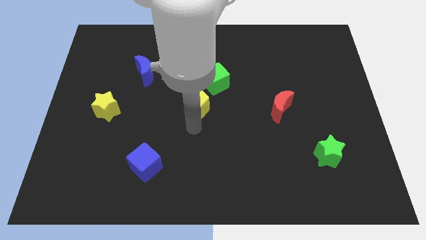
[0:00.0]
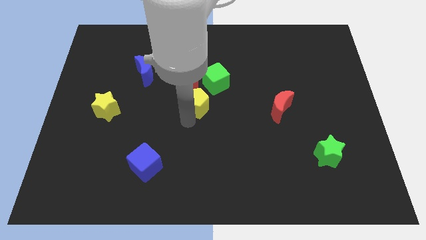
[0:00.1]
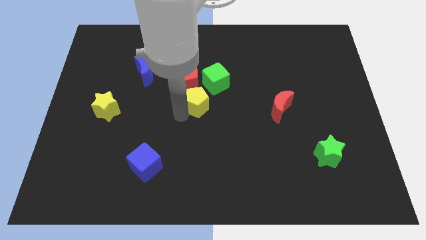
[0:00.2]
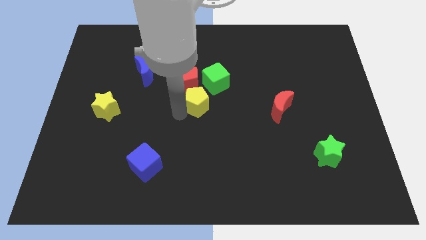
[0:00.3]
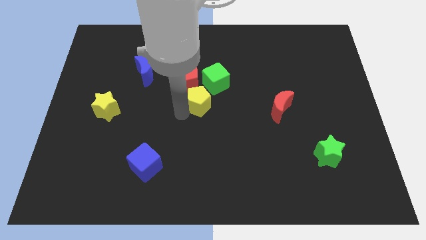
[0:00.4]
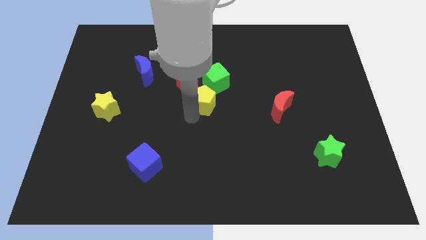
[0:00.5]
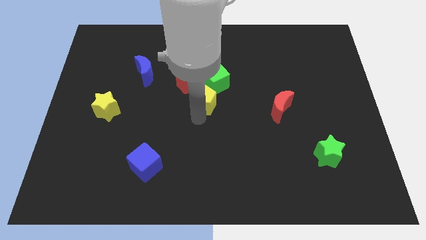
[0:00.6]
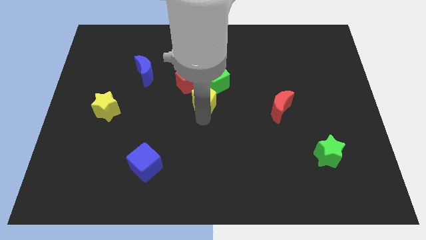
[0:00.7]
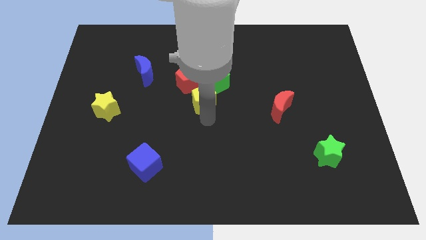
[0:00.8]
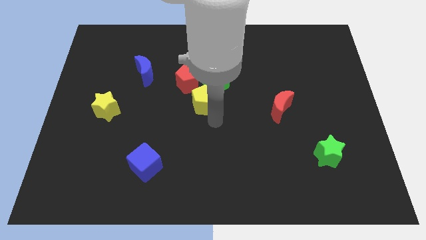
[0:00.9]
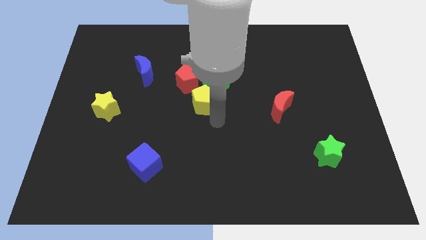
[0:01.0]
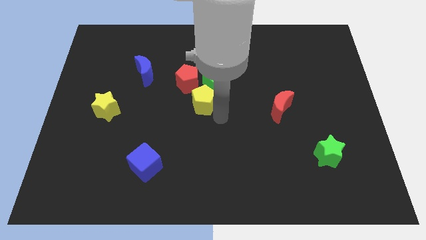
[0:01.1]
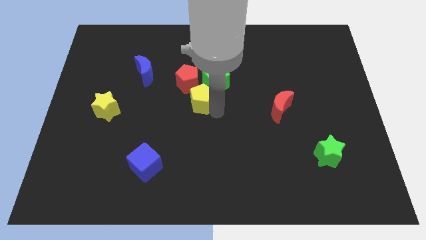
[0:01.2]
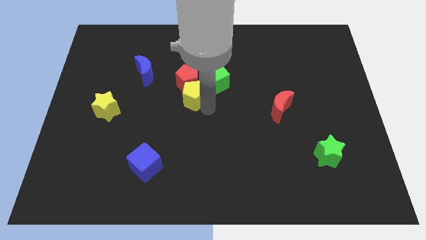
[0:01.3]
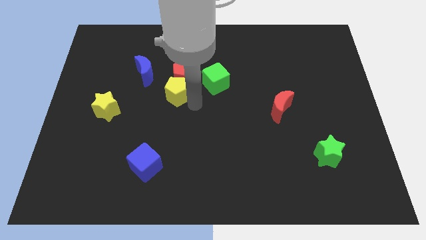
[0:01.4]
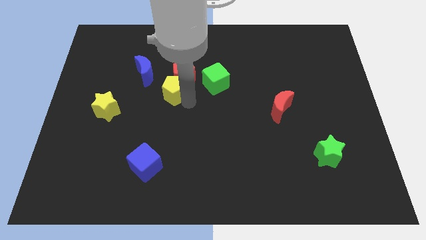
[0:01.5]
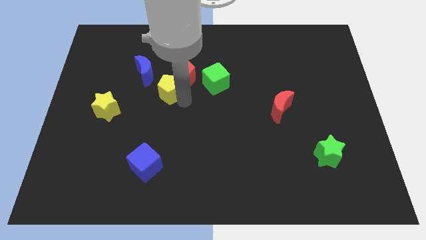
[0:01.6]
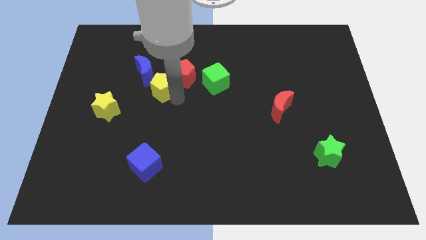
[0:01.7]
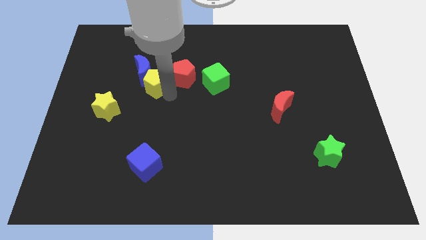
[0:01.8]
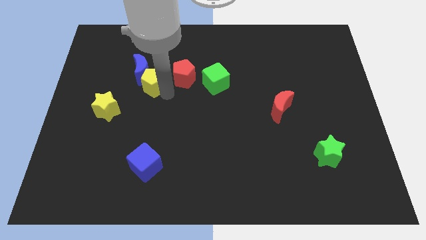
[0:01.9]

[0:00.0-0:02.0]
push the yellow pentagon into the blue crescent

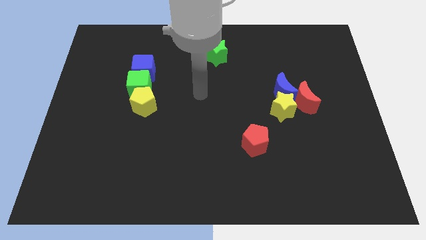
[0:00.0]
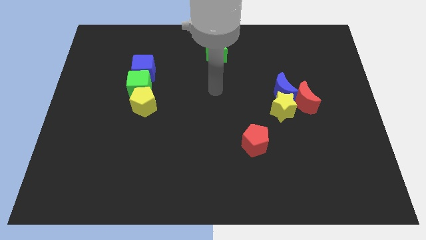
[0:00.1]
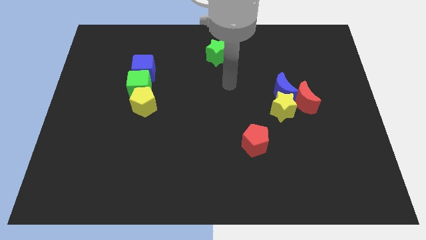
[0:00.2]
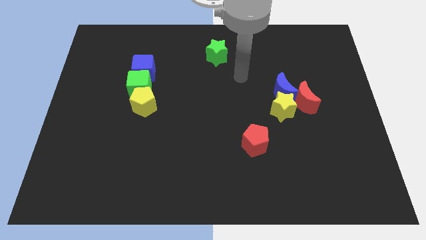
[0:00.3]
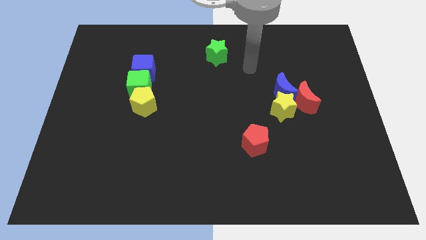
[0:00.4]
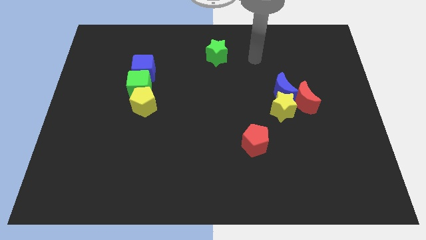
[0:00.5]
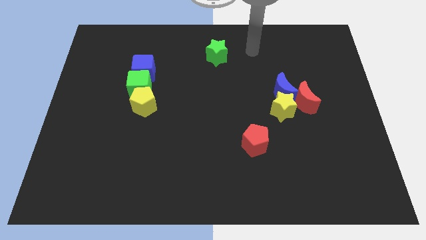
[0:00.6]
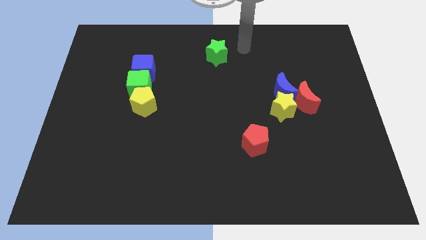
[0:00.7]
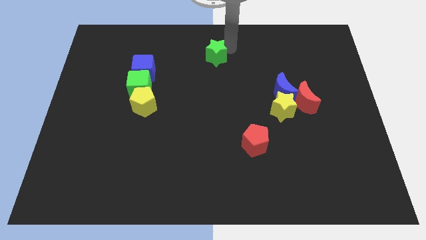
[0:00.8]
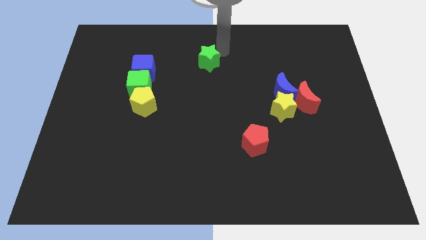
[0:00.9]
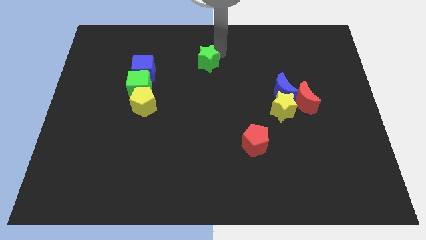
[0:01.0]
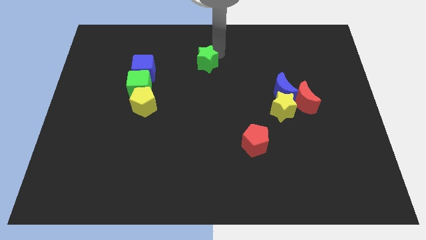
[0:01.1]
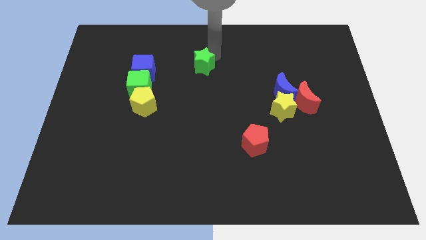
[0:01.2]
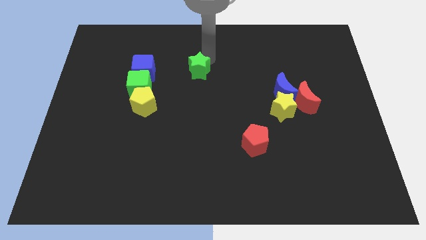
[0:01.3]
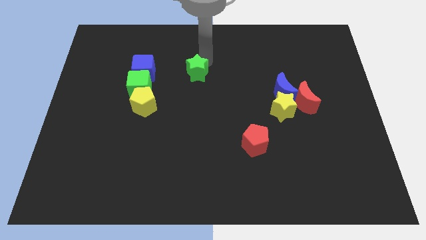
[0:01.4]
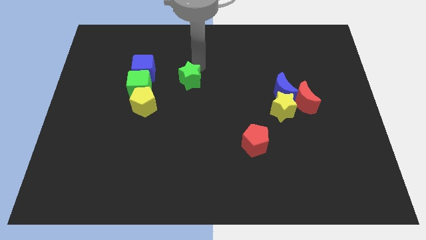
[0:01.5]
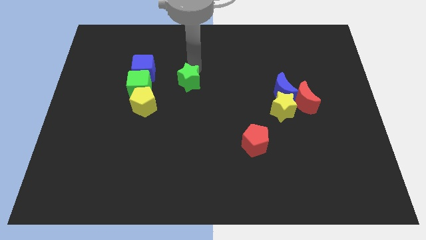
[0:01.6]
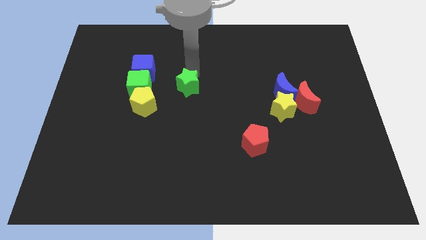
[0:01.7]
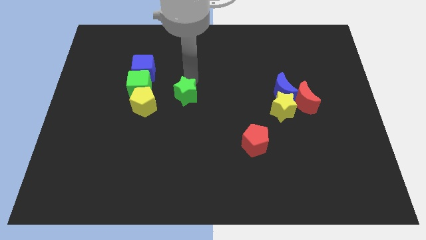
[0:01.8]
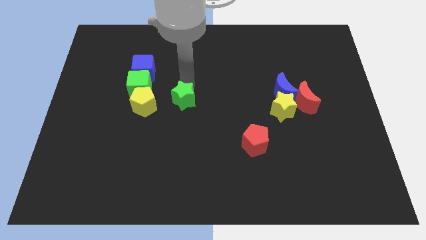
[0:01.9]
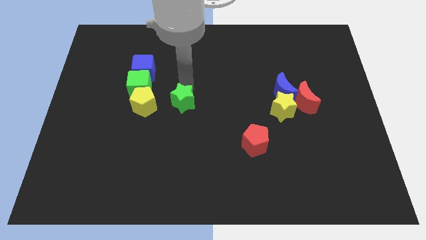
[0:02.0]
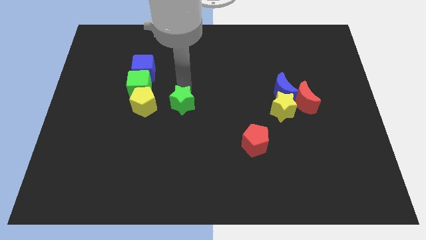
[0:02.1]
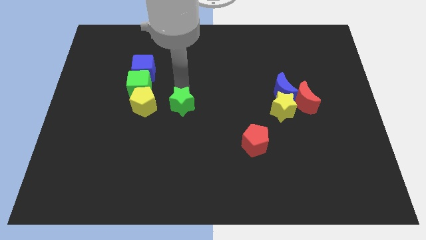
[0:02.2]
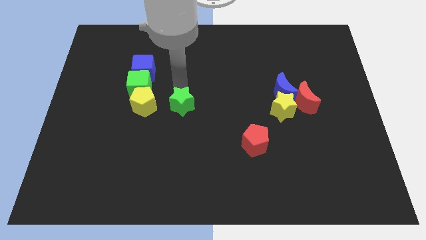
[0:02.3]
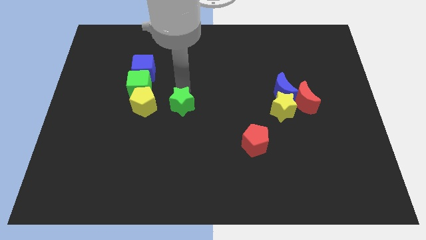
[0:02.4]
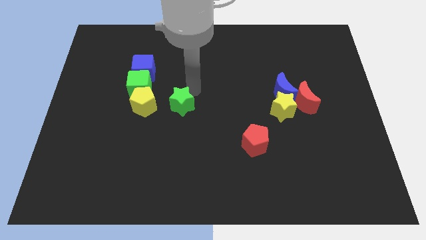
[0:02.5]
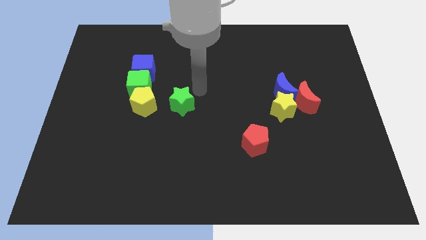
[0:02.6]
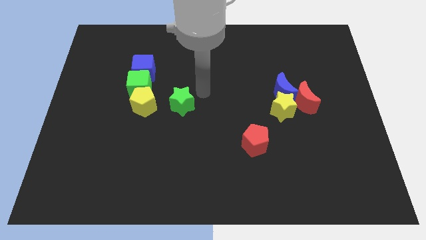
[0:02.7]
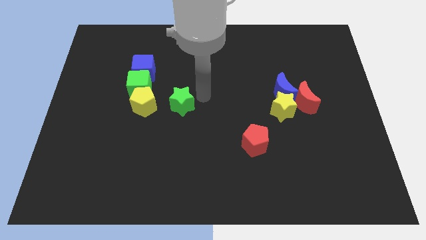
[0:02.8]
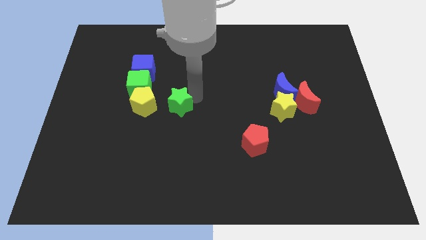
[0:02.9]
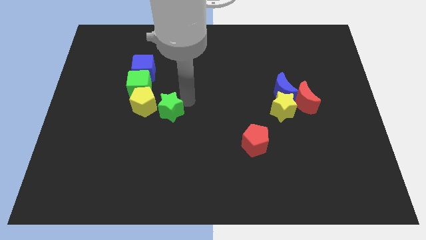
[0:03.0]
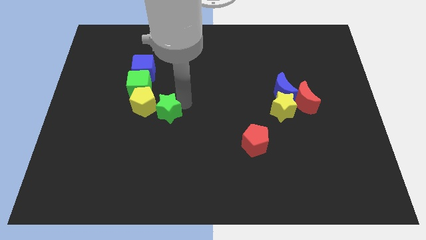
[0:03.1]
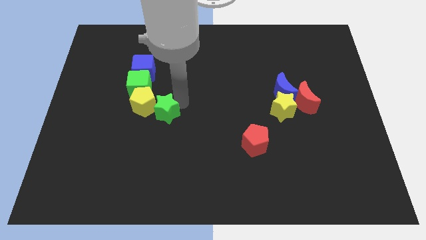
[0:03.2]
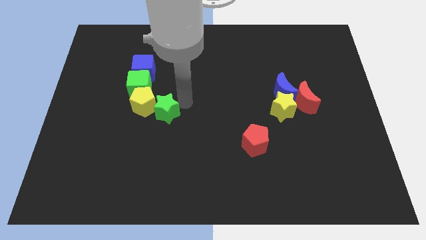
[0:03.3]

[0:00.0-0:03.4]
push the green star close to the right side of the yellow pentagon

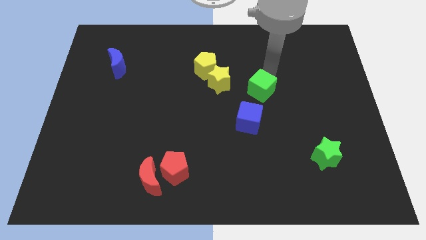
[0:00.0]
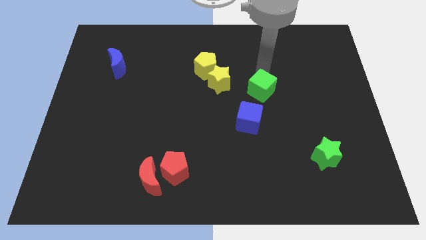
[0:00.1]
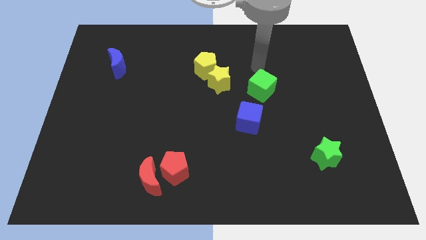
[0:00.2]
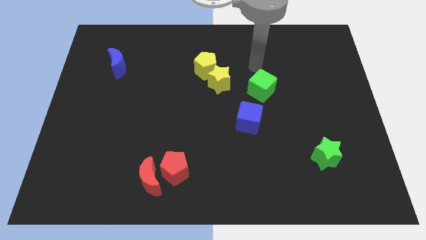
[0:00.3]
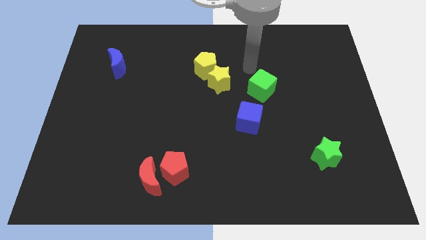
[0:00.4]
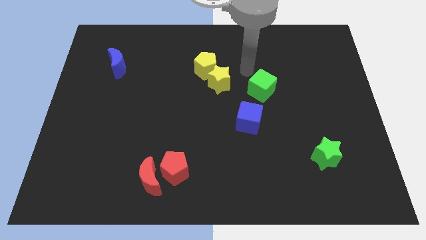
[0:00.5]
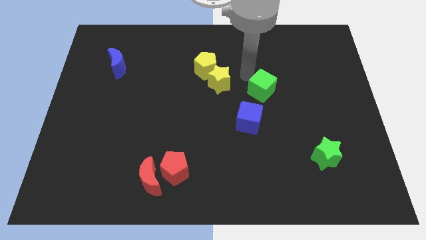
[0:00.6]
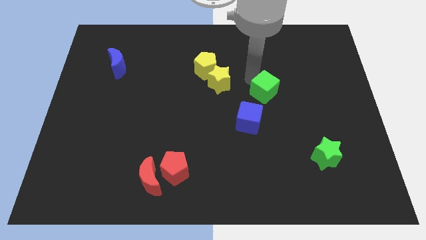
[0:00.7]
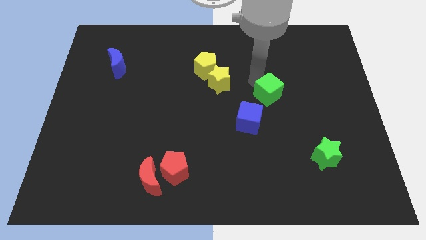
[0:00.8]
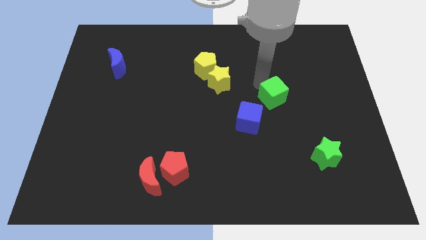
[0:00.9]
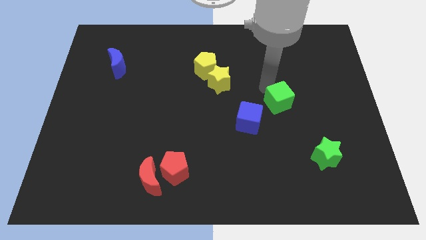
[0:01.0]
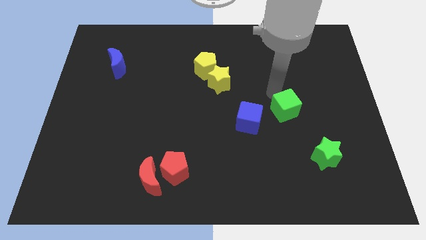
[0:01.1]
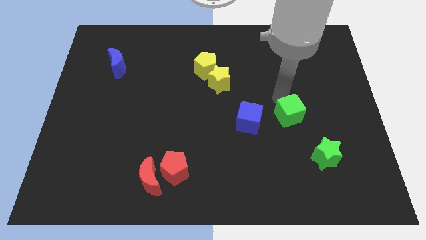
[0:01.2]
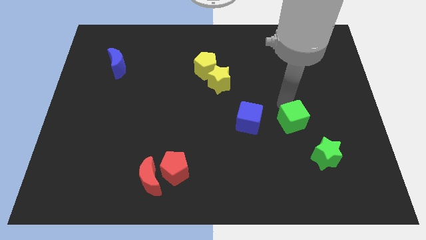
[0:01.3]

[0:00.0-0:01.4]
move the green cube to the left side of the blue cube

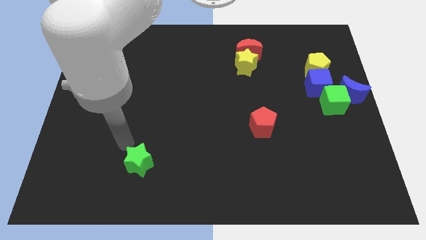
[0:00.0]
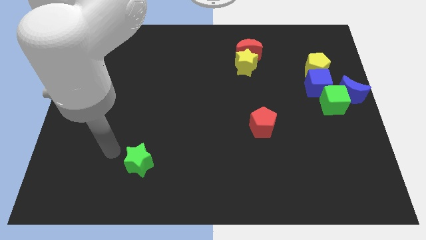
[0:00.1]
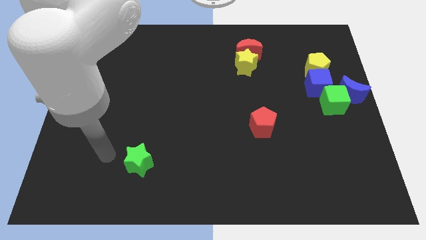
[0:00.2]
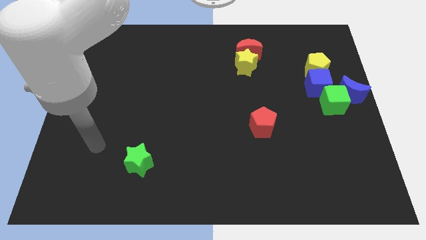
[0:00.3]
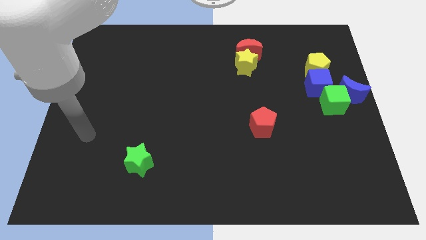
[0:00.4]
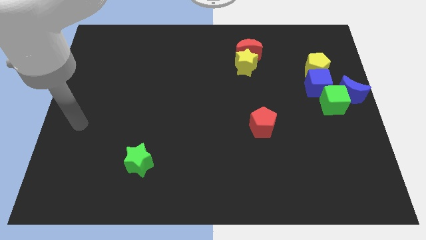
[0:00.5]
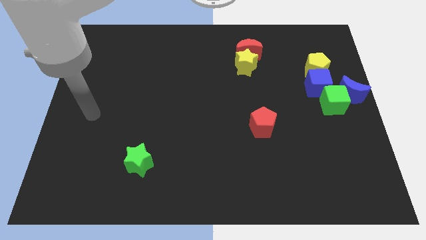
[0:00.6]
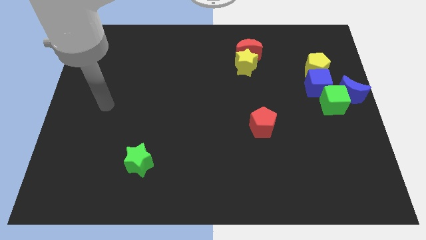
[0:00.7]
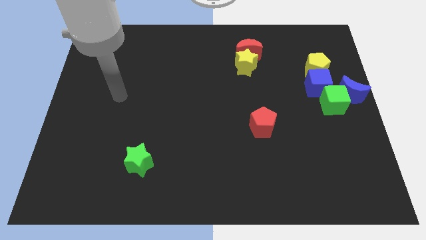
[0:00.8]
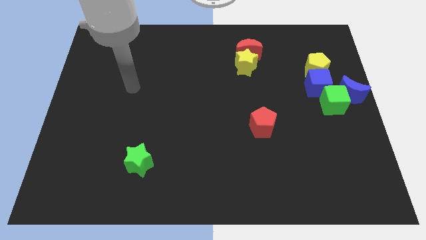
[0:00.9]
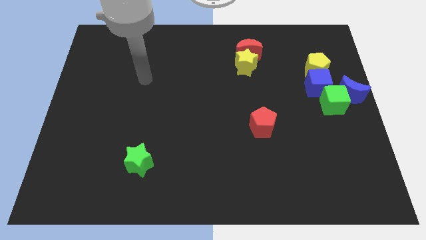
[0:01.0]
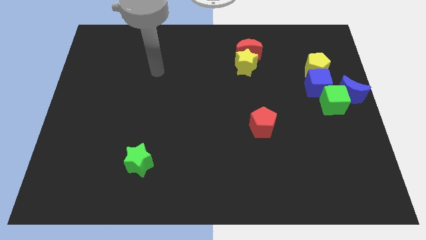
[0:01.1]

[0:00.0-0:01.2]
move your arm towards top

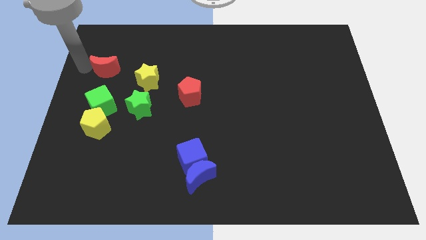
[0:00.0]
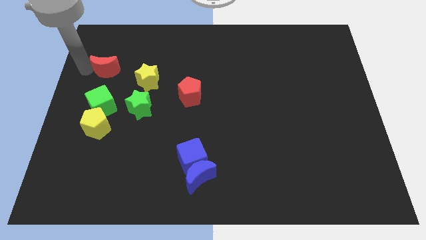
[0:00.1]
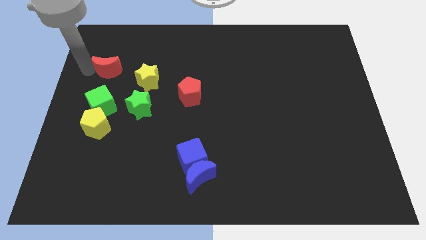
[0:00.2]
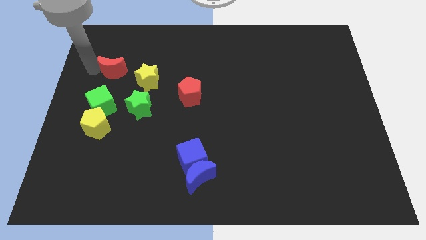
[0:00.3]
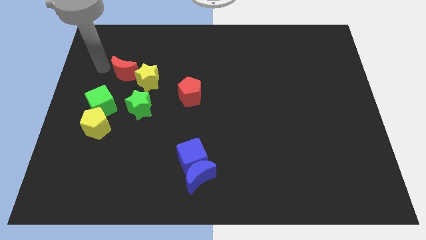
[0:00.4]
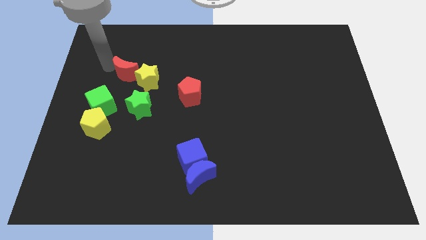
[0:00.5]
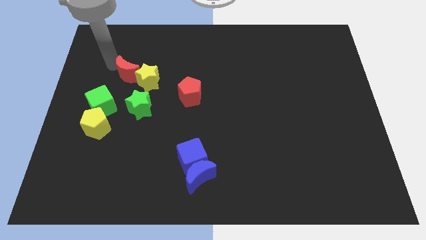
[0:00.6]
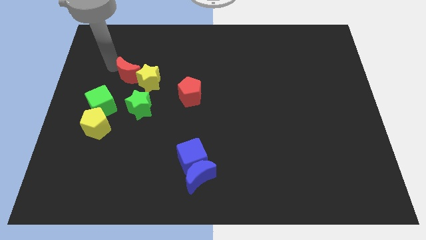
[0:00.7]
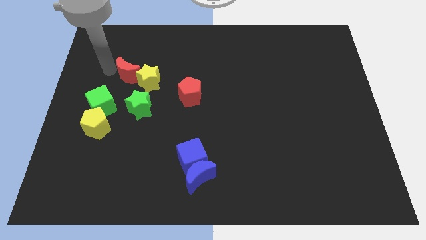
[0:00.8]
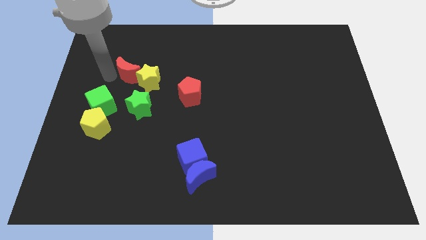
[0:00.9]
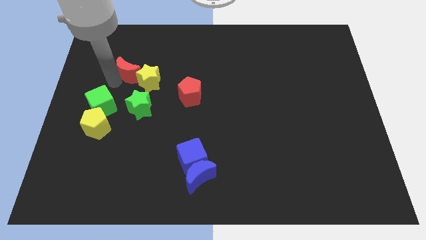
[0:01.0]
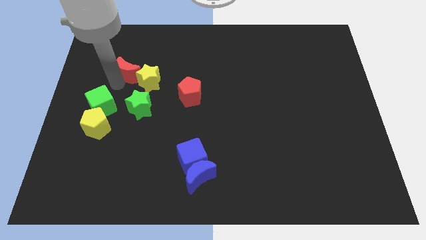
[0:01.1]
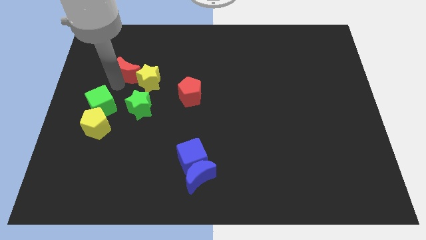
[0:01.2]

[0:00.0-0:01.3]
push the red moon to the left of the yellow star
